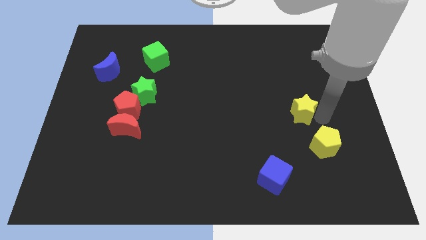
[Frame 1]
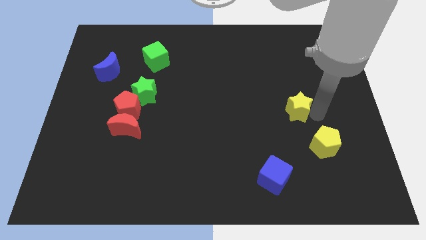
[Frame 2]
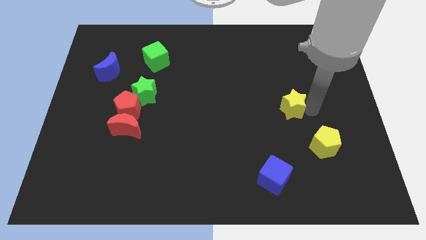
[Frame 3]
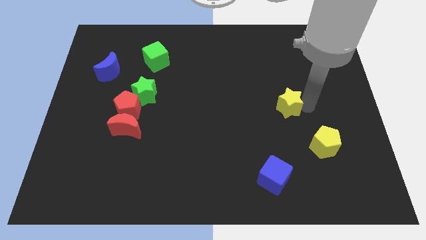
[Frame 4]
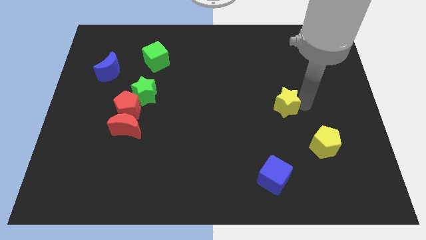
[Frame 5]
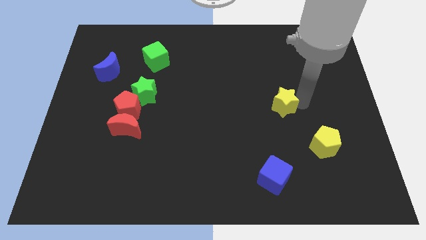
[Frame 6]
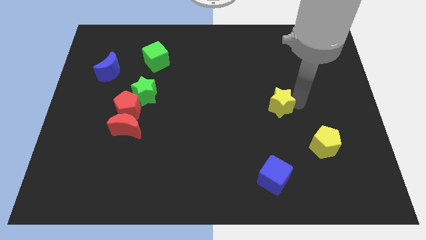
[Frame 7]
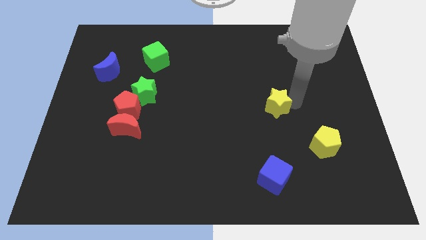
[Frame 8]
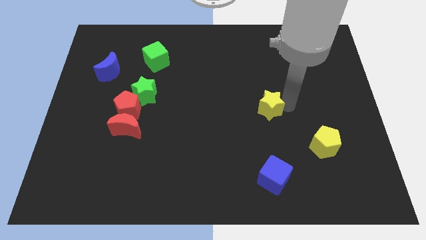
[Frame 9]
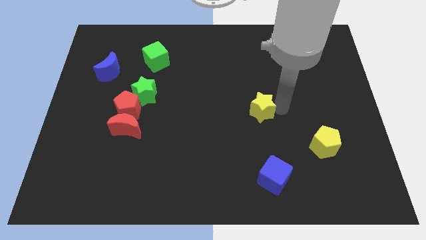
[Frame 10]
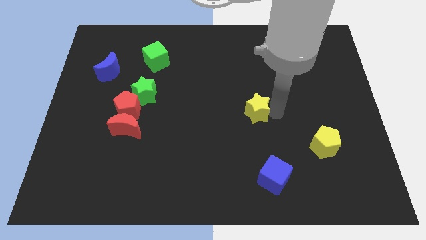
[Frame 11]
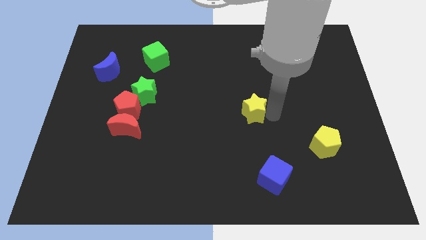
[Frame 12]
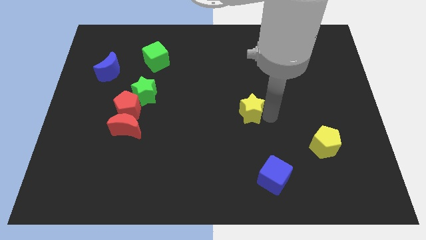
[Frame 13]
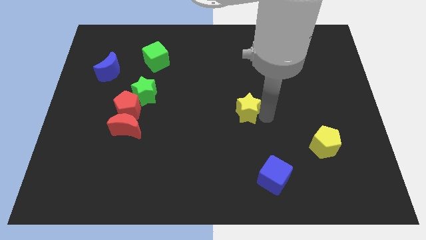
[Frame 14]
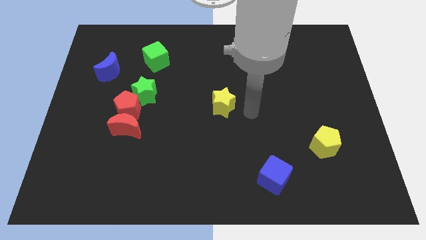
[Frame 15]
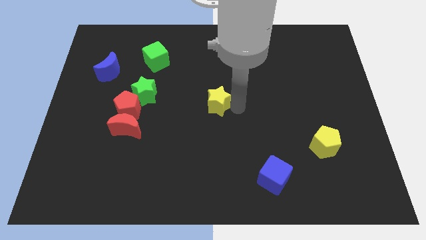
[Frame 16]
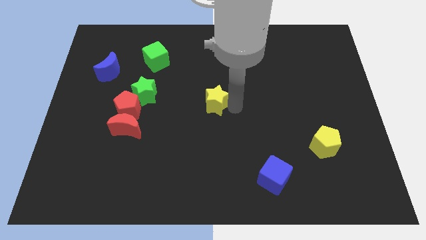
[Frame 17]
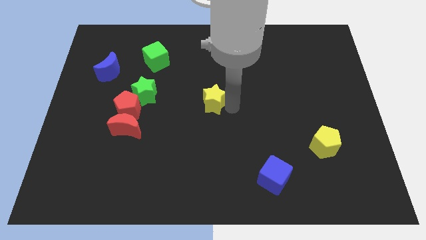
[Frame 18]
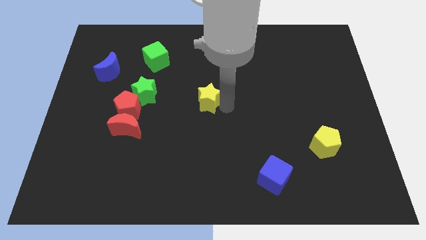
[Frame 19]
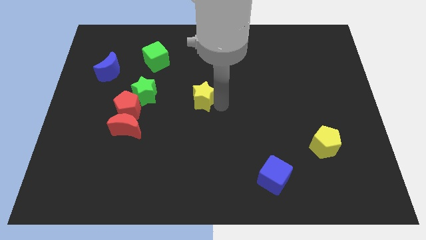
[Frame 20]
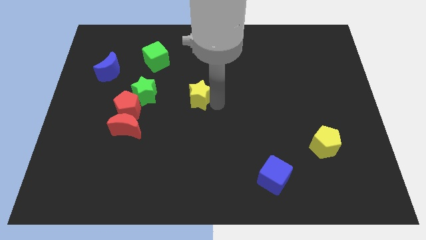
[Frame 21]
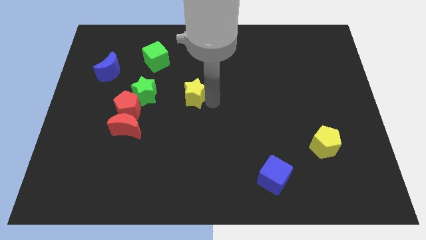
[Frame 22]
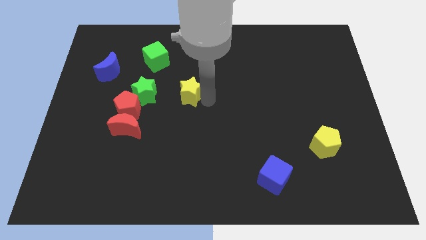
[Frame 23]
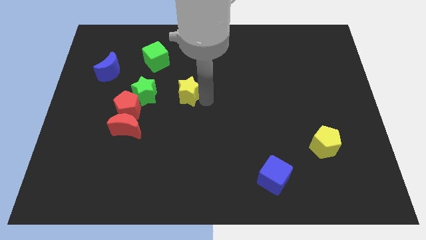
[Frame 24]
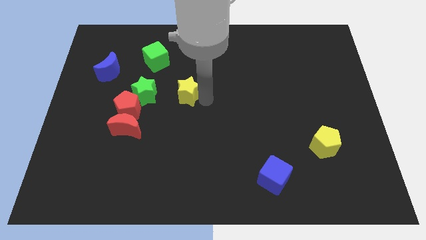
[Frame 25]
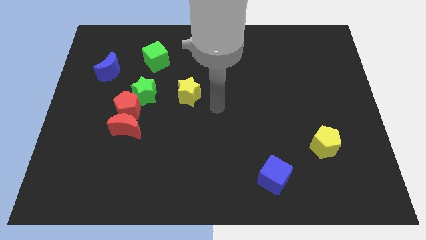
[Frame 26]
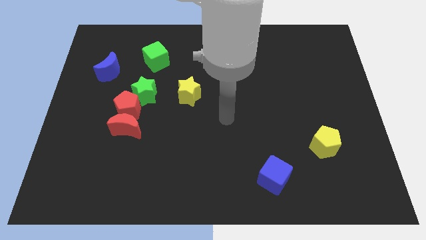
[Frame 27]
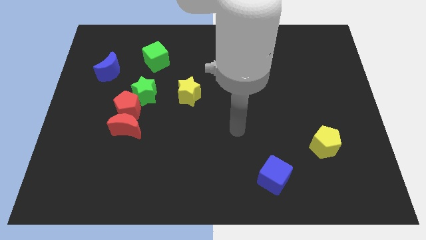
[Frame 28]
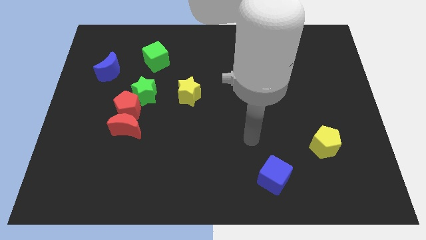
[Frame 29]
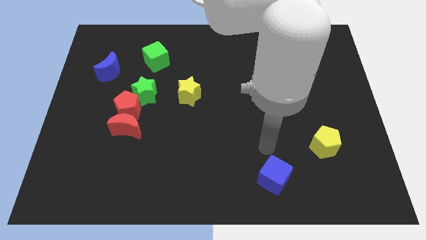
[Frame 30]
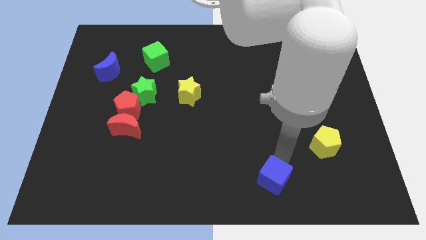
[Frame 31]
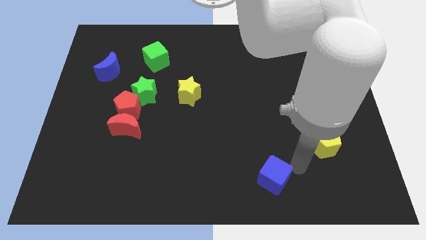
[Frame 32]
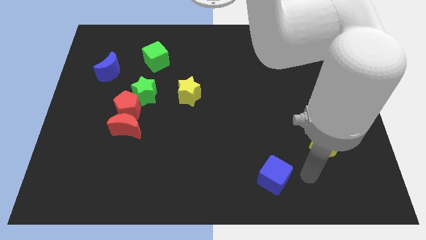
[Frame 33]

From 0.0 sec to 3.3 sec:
put the yellow star parallel to green star

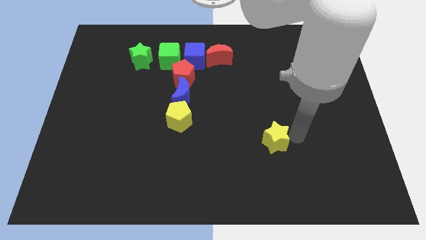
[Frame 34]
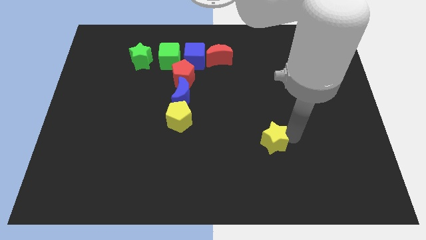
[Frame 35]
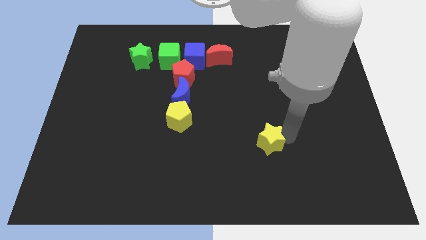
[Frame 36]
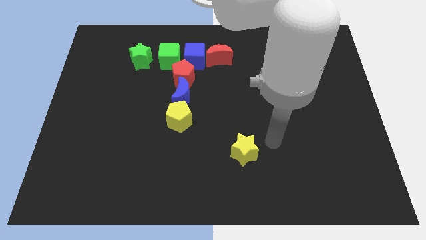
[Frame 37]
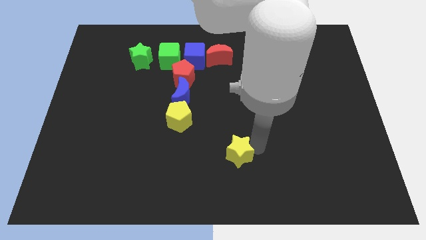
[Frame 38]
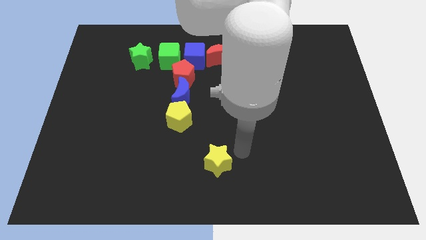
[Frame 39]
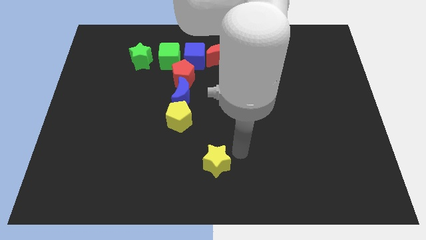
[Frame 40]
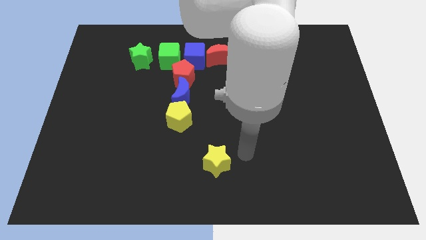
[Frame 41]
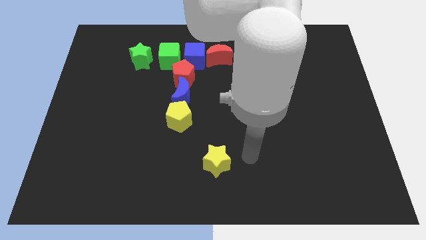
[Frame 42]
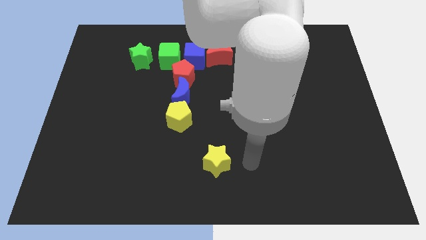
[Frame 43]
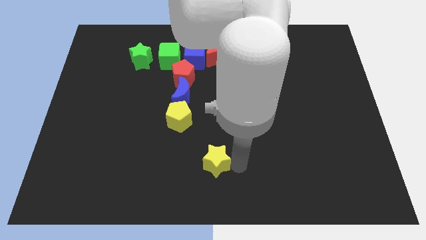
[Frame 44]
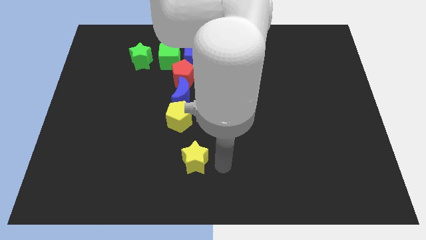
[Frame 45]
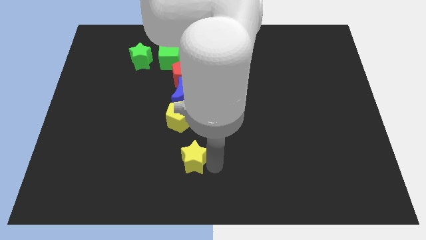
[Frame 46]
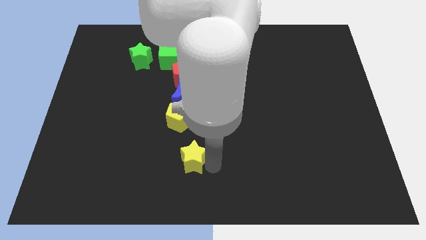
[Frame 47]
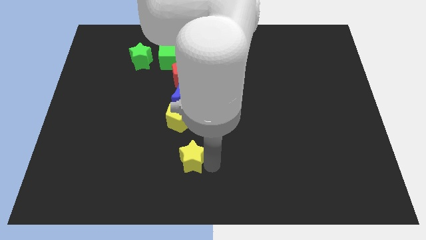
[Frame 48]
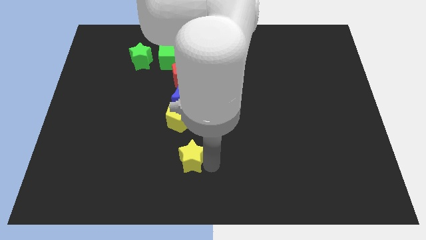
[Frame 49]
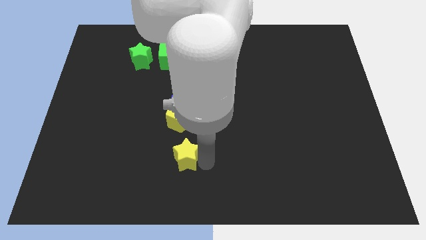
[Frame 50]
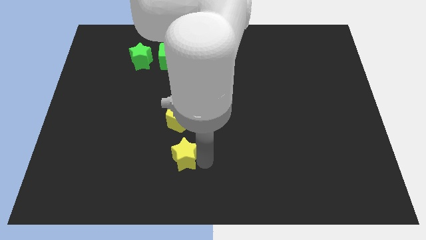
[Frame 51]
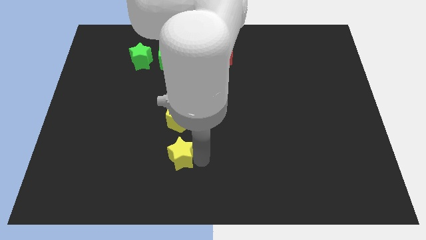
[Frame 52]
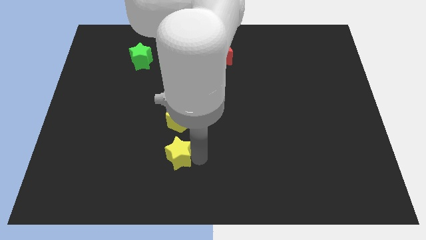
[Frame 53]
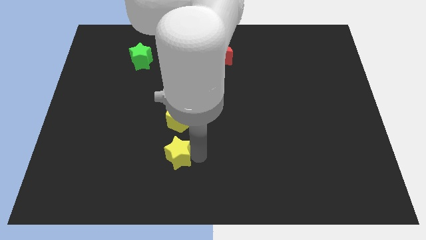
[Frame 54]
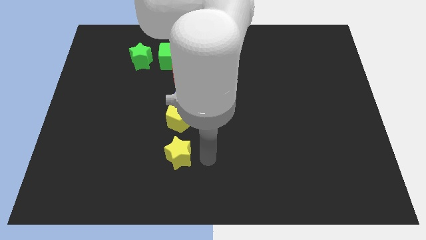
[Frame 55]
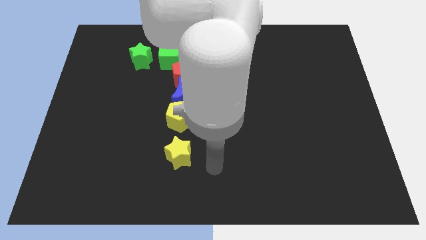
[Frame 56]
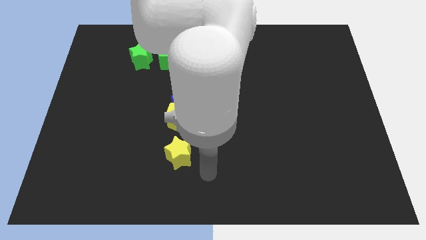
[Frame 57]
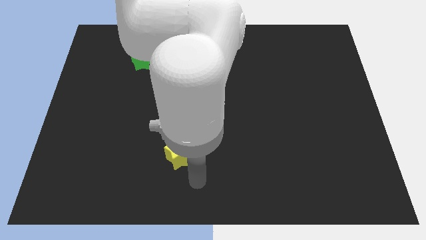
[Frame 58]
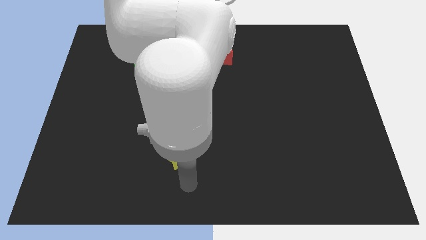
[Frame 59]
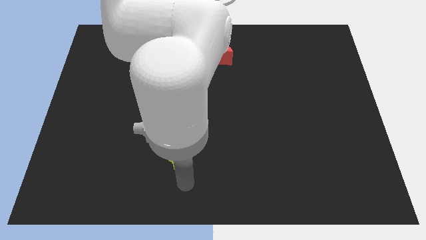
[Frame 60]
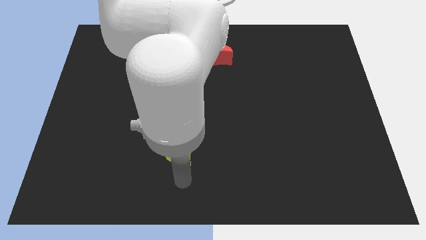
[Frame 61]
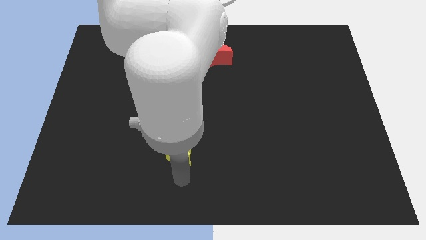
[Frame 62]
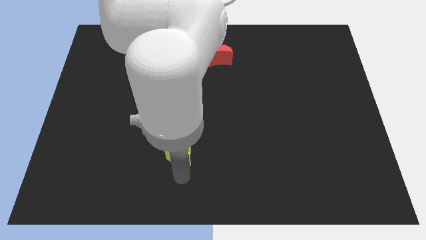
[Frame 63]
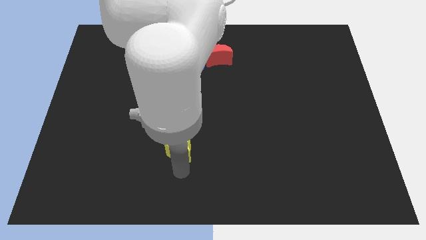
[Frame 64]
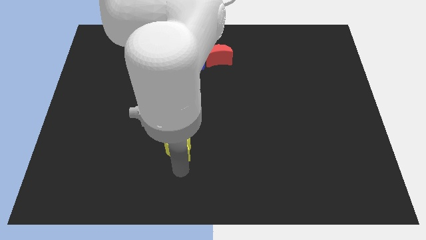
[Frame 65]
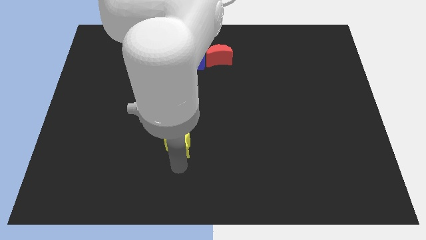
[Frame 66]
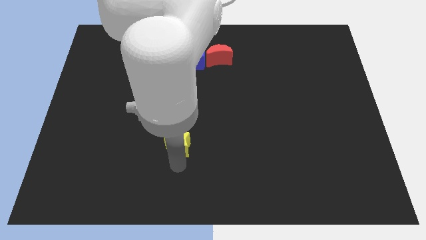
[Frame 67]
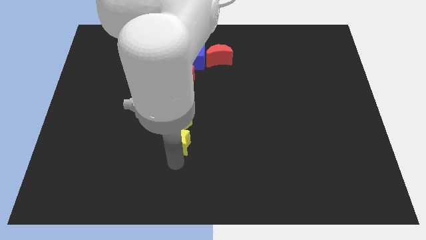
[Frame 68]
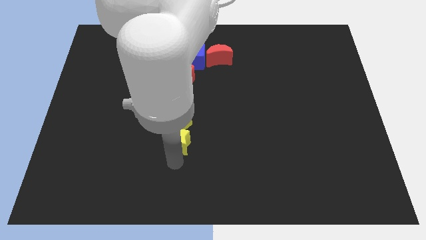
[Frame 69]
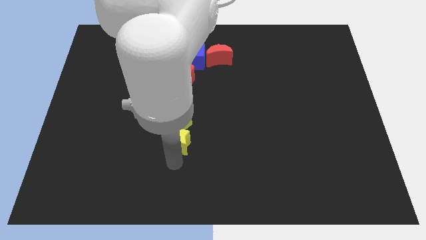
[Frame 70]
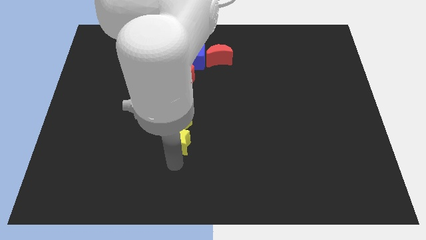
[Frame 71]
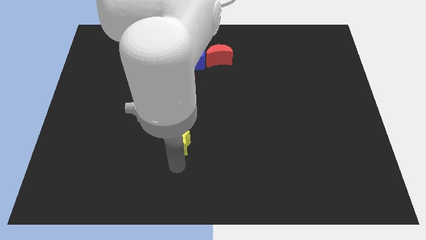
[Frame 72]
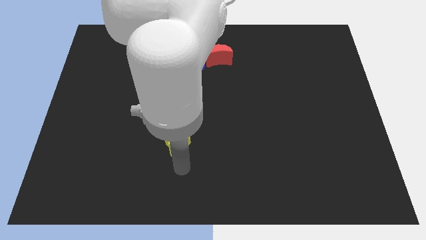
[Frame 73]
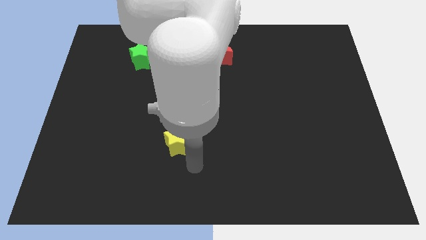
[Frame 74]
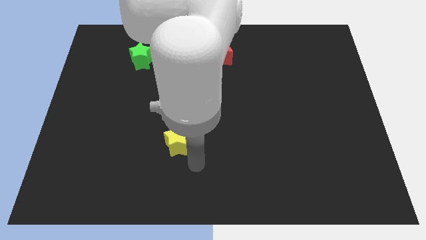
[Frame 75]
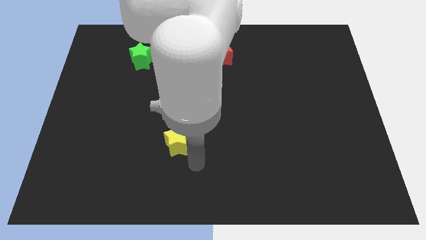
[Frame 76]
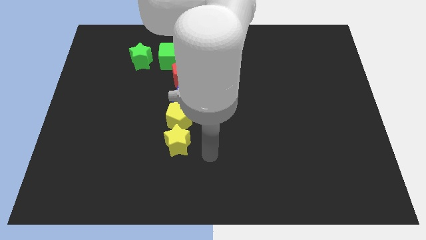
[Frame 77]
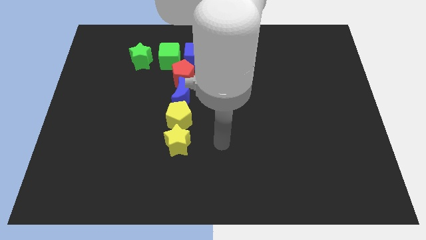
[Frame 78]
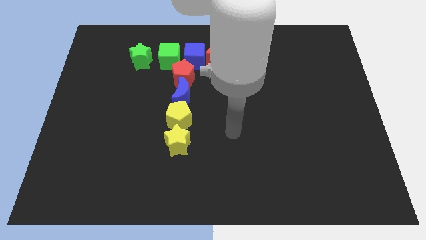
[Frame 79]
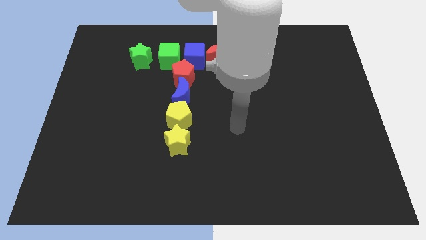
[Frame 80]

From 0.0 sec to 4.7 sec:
place the yellow star at the bottom side of the yellow pentagon

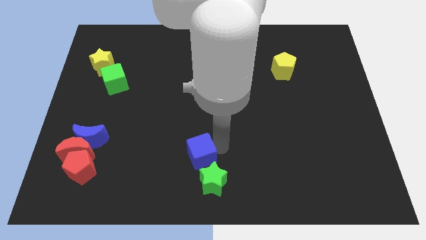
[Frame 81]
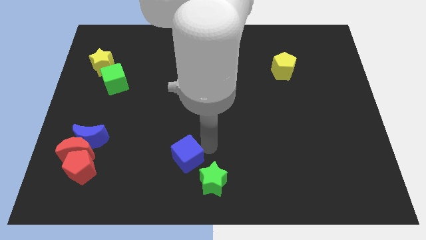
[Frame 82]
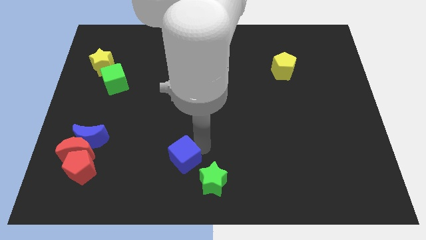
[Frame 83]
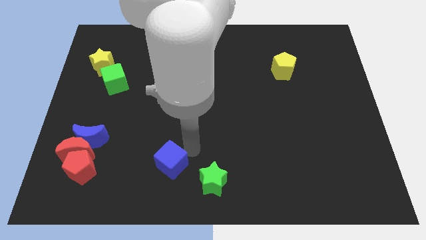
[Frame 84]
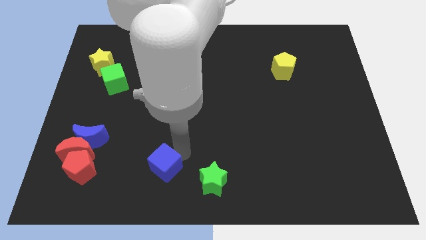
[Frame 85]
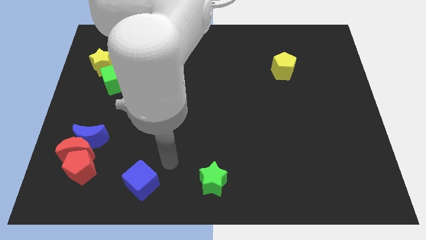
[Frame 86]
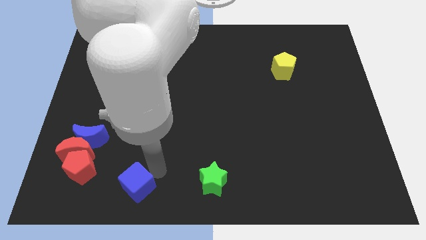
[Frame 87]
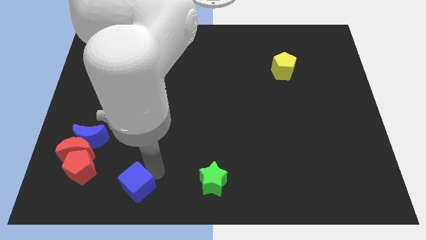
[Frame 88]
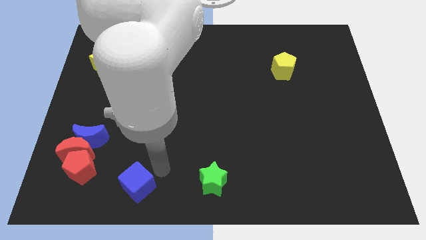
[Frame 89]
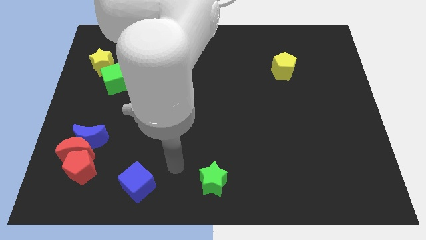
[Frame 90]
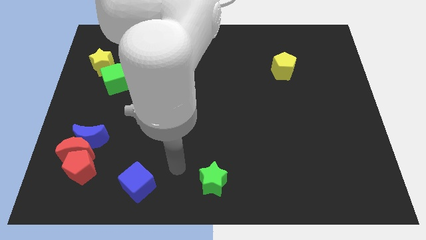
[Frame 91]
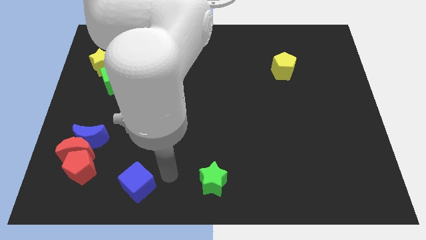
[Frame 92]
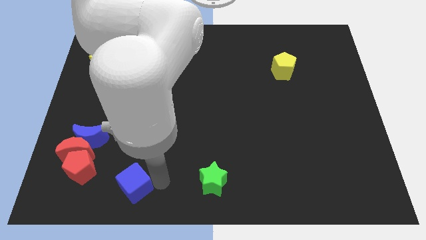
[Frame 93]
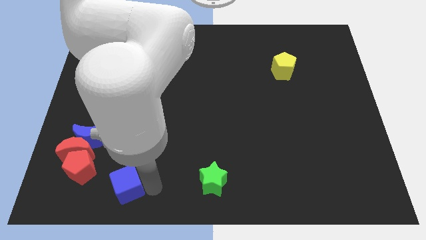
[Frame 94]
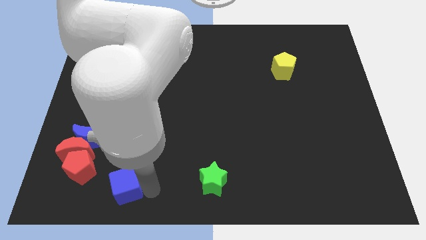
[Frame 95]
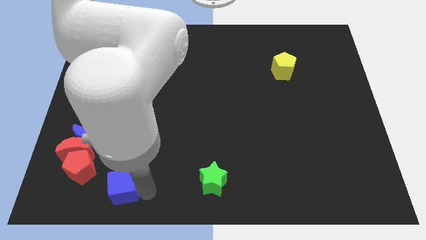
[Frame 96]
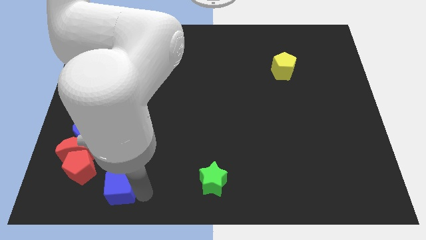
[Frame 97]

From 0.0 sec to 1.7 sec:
move the blue cube towards left side
